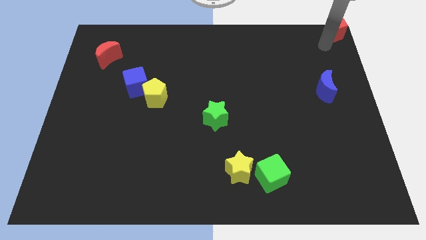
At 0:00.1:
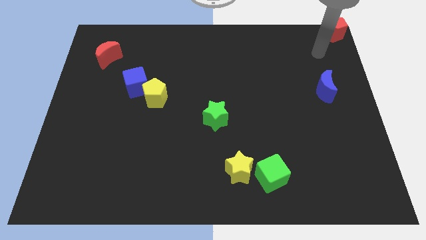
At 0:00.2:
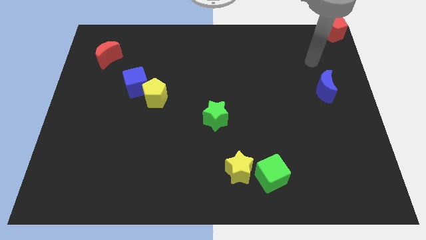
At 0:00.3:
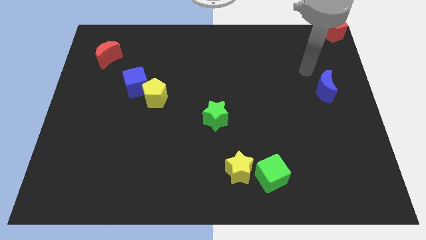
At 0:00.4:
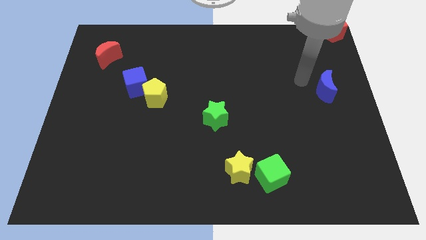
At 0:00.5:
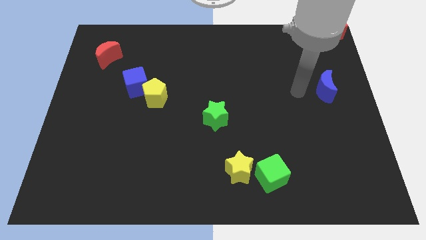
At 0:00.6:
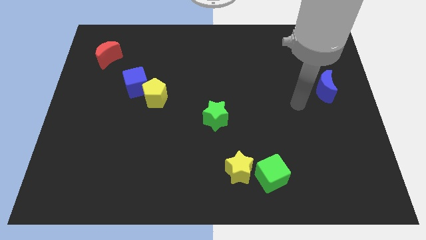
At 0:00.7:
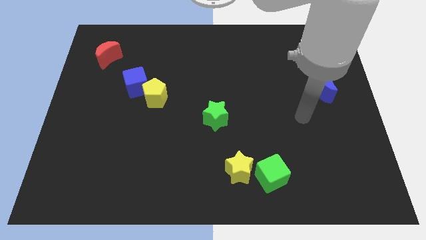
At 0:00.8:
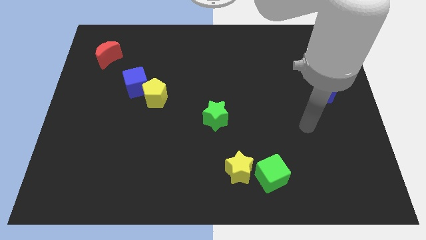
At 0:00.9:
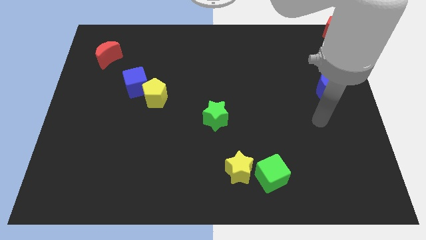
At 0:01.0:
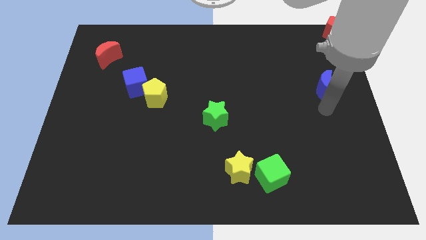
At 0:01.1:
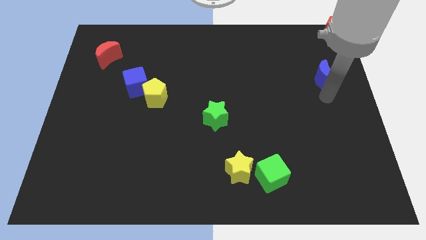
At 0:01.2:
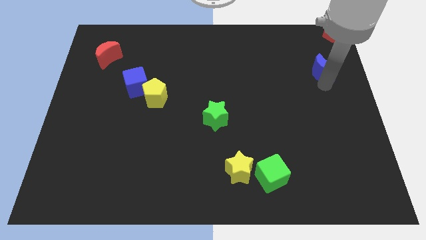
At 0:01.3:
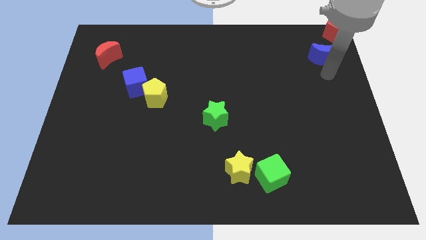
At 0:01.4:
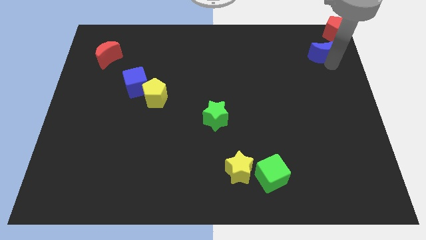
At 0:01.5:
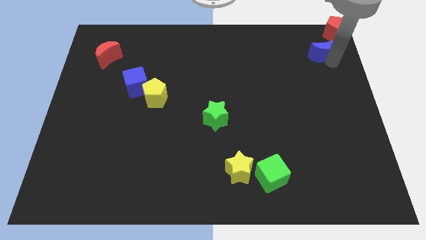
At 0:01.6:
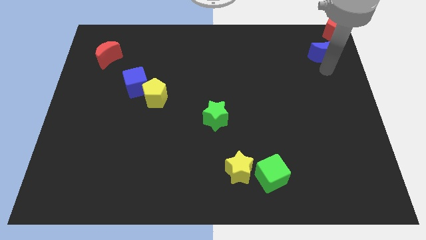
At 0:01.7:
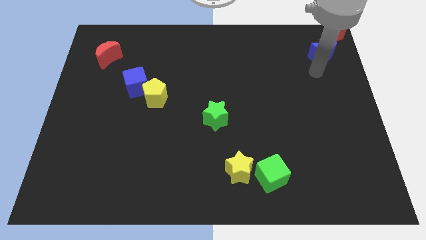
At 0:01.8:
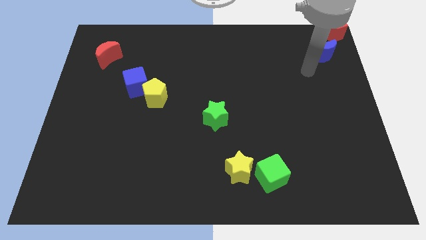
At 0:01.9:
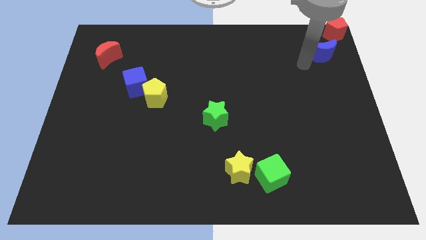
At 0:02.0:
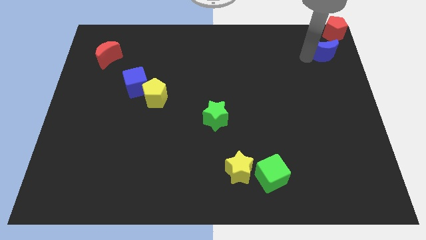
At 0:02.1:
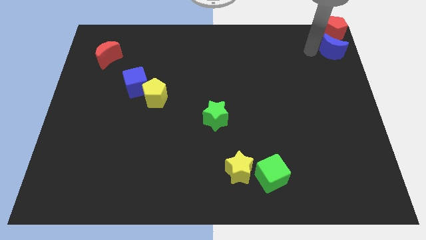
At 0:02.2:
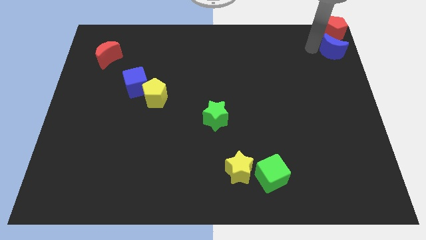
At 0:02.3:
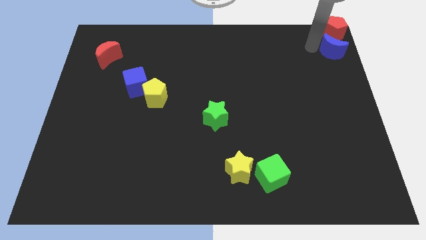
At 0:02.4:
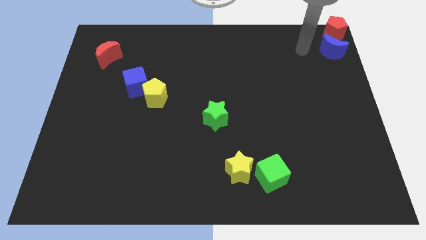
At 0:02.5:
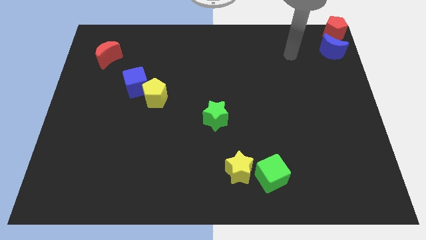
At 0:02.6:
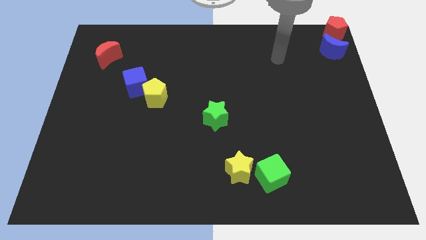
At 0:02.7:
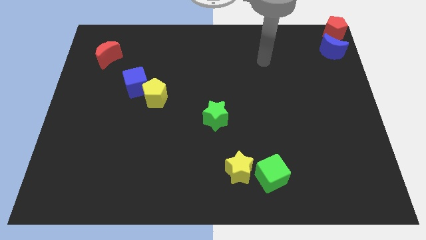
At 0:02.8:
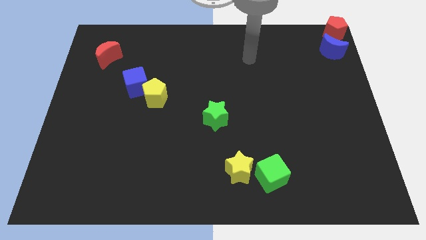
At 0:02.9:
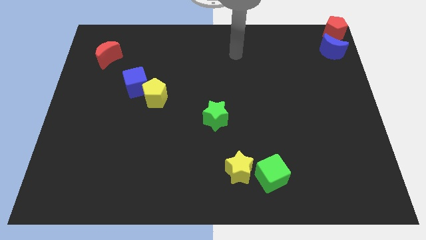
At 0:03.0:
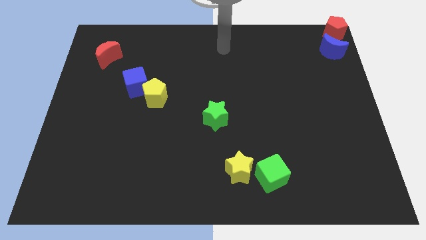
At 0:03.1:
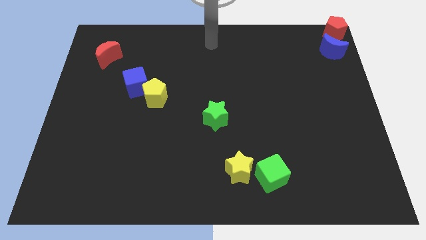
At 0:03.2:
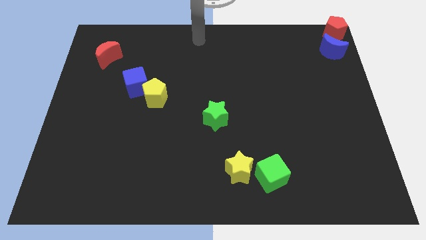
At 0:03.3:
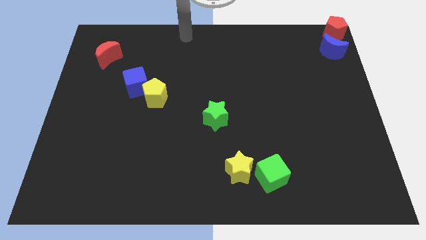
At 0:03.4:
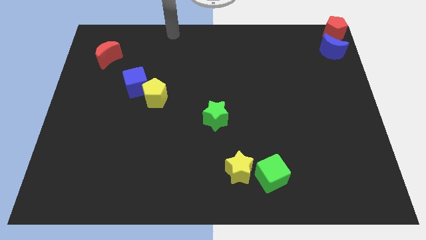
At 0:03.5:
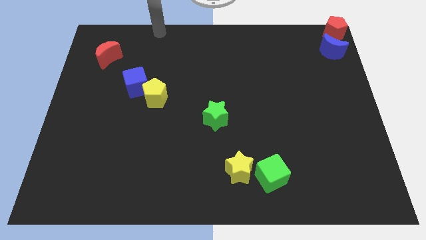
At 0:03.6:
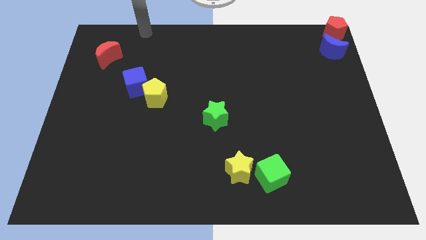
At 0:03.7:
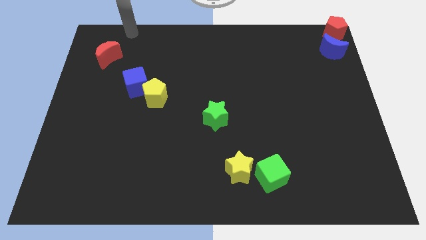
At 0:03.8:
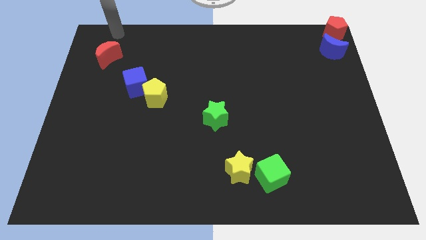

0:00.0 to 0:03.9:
push the blue crescent to the bottom of the red pentagon

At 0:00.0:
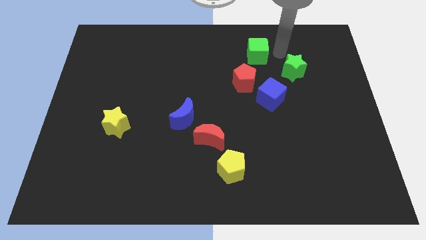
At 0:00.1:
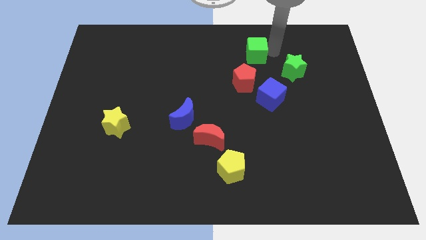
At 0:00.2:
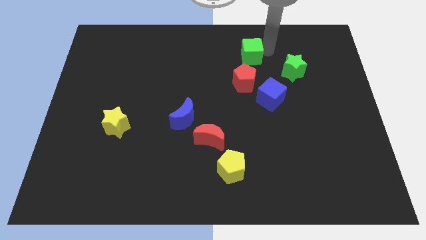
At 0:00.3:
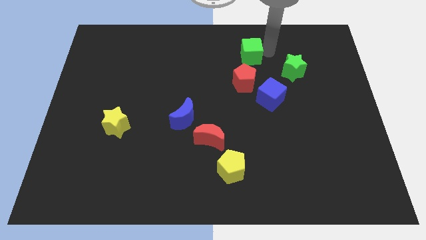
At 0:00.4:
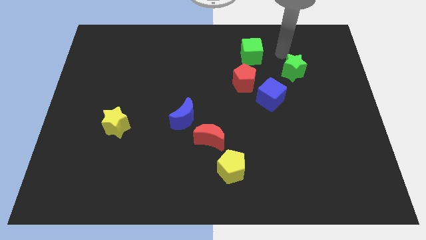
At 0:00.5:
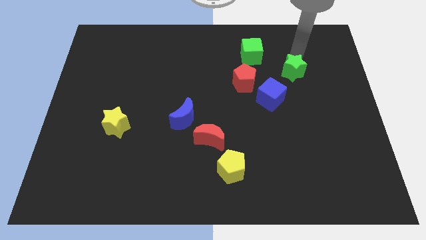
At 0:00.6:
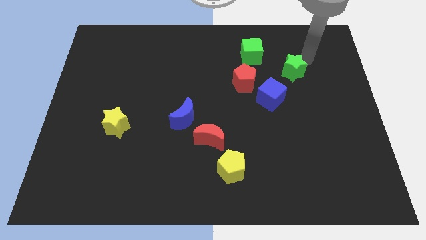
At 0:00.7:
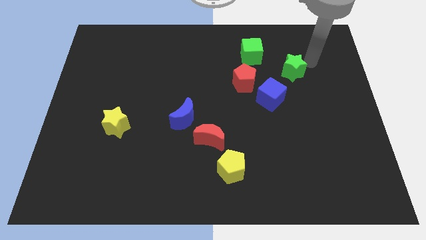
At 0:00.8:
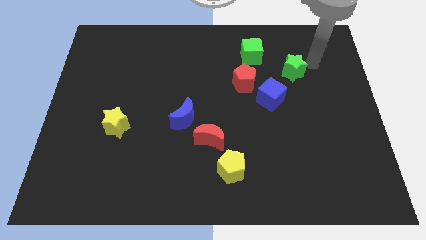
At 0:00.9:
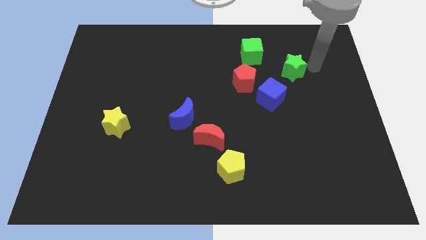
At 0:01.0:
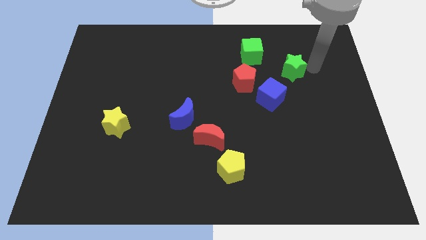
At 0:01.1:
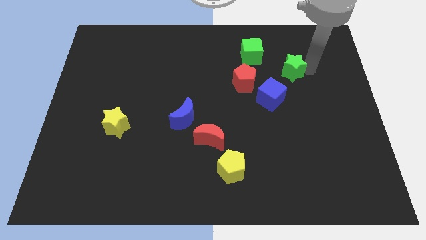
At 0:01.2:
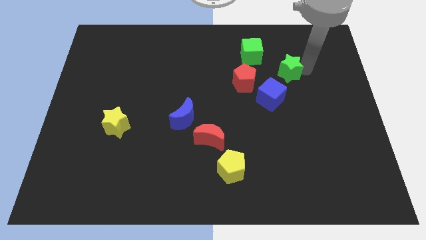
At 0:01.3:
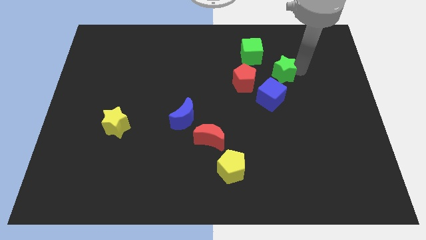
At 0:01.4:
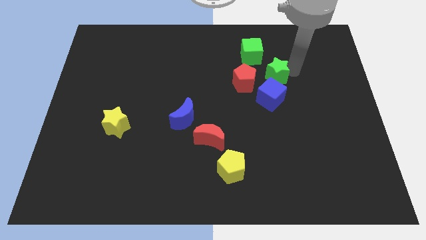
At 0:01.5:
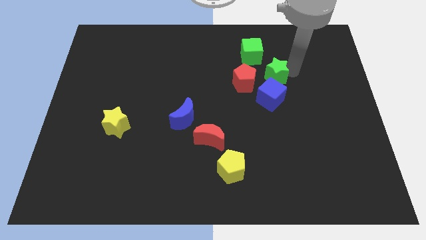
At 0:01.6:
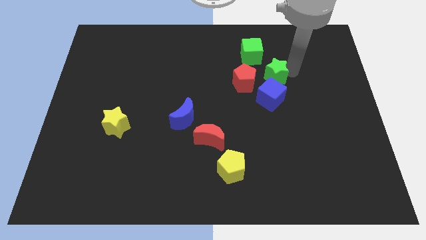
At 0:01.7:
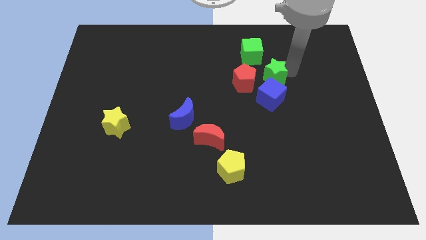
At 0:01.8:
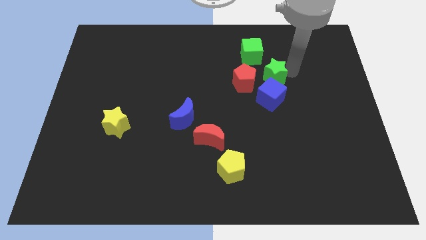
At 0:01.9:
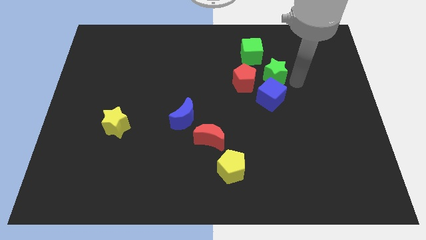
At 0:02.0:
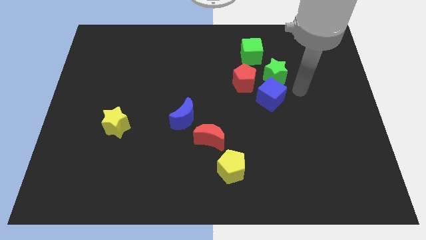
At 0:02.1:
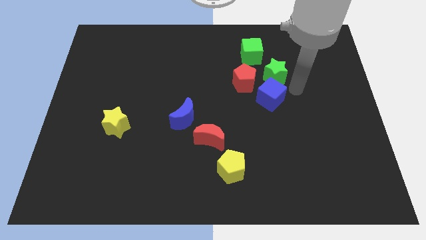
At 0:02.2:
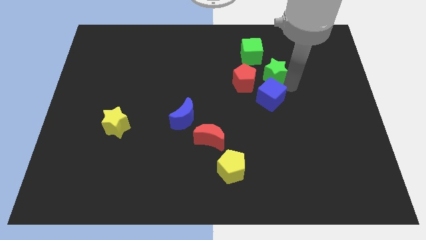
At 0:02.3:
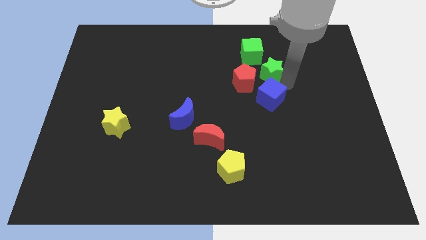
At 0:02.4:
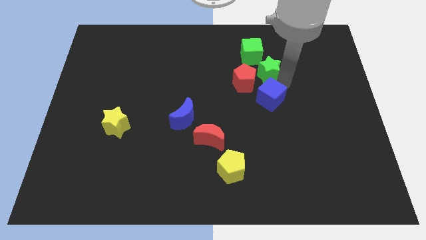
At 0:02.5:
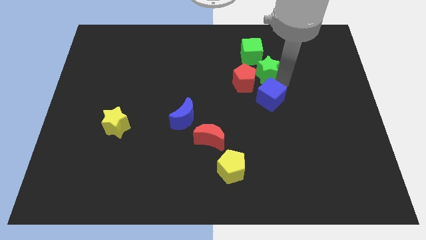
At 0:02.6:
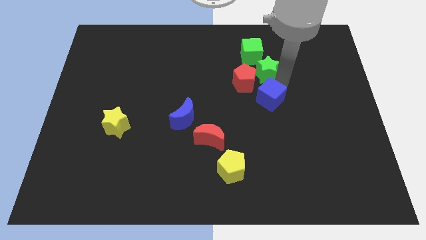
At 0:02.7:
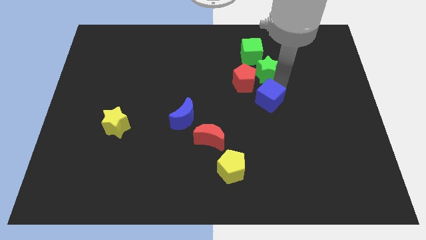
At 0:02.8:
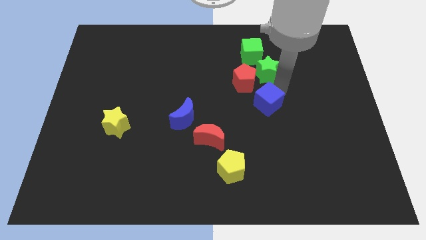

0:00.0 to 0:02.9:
push the green star close to the red pentagon

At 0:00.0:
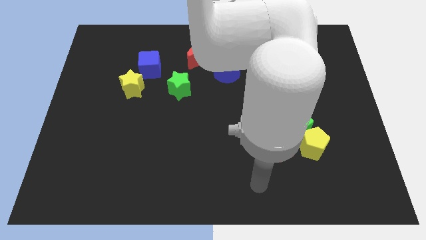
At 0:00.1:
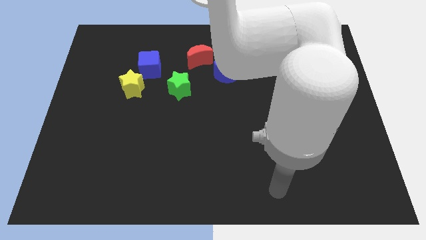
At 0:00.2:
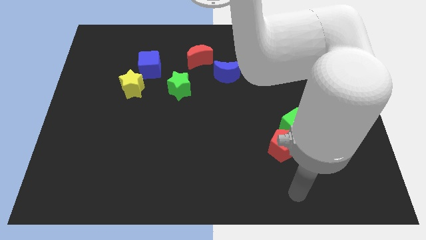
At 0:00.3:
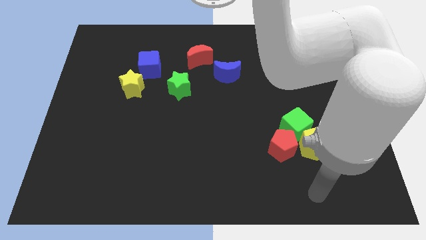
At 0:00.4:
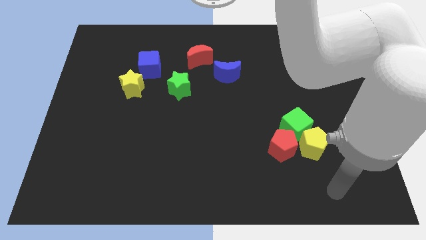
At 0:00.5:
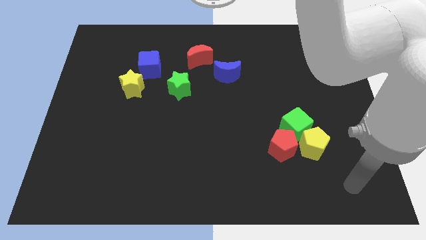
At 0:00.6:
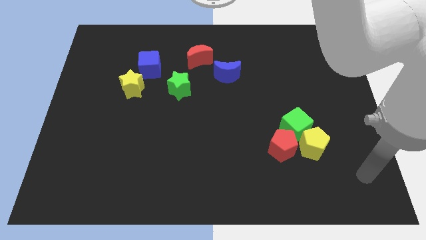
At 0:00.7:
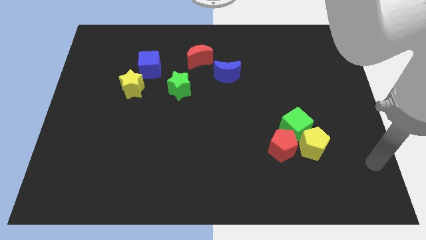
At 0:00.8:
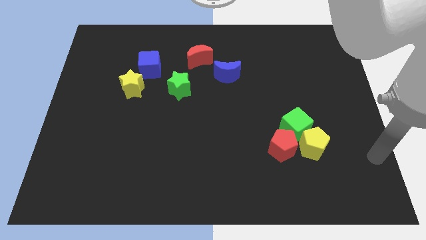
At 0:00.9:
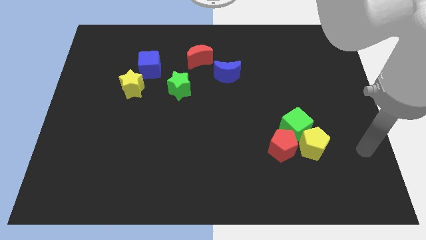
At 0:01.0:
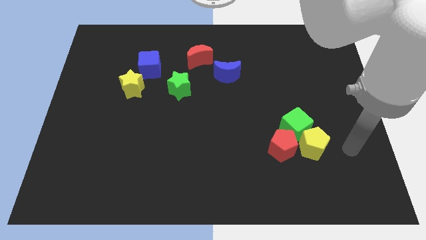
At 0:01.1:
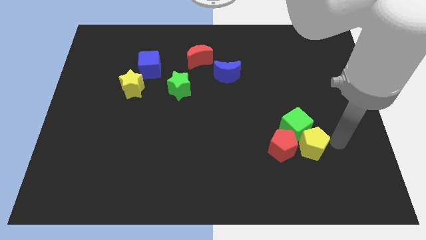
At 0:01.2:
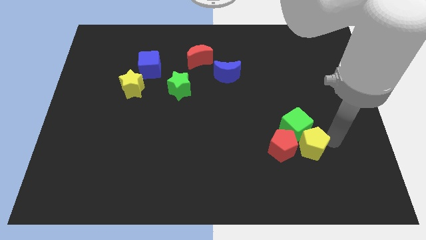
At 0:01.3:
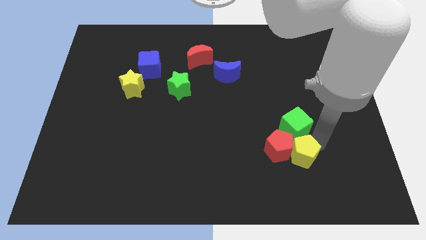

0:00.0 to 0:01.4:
place the arm right to the yellow pentagon

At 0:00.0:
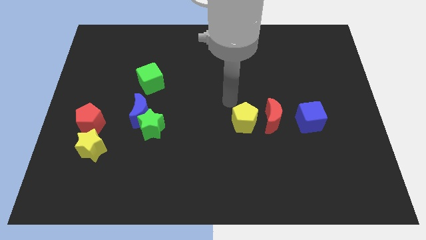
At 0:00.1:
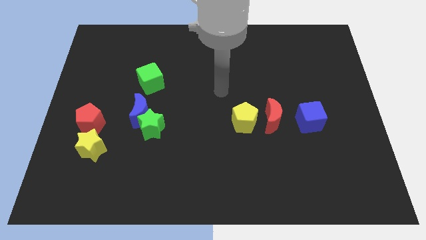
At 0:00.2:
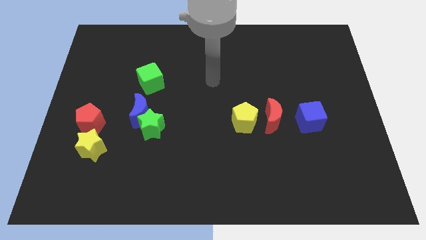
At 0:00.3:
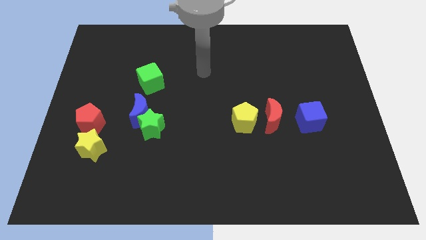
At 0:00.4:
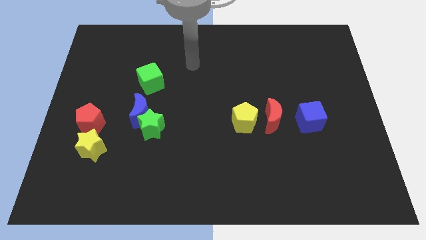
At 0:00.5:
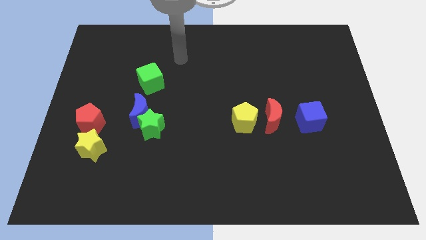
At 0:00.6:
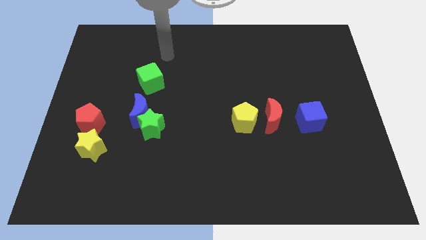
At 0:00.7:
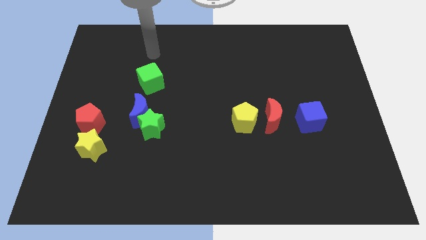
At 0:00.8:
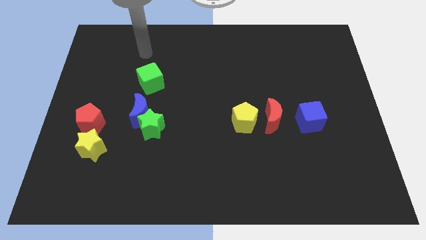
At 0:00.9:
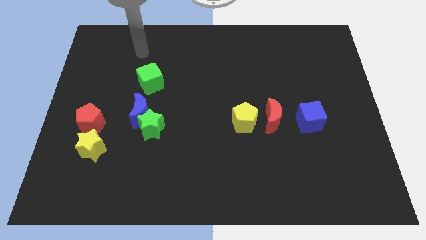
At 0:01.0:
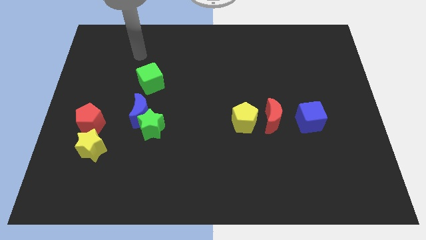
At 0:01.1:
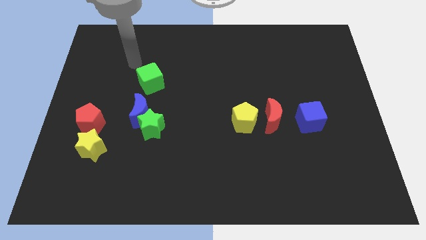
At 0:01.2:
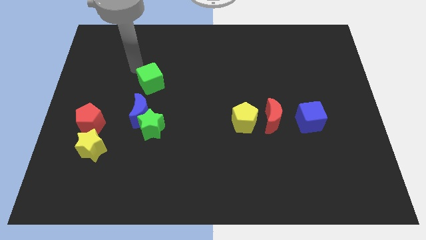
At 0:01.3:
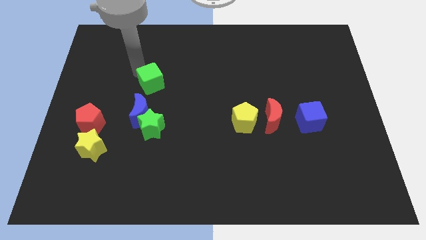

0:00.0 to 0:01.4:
move your arm towards the green cube
